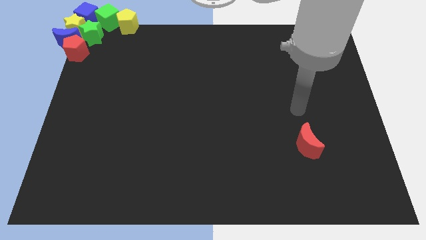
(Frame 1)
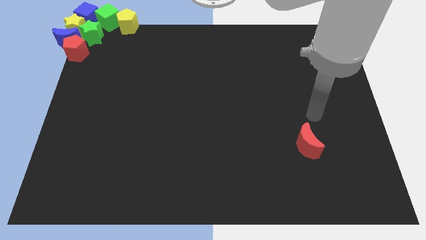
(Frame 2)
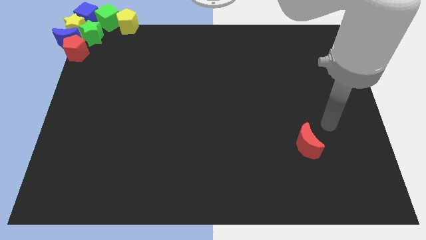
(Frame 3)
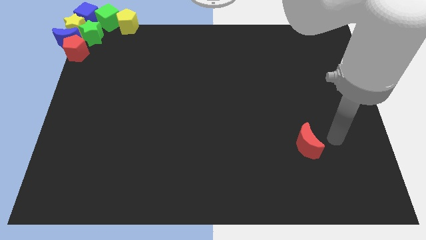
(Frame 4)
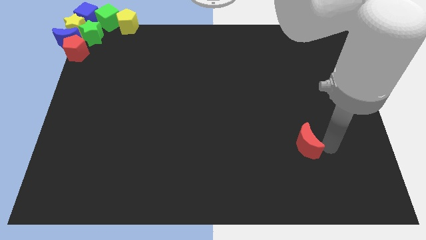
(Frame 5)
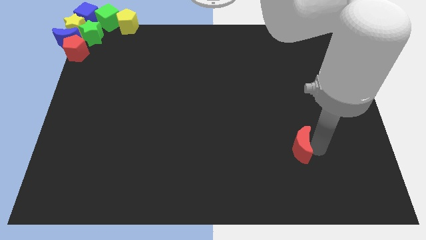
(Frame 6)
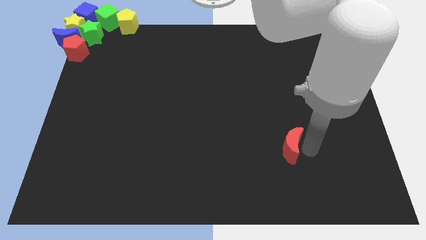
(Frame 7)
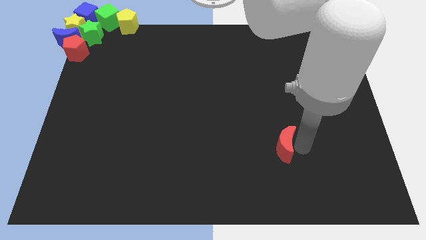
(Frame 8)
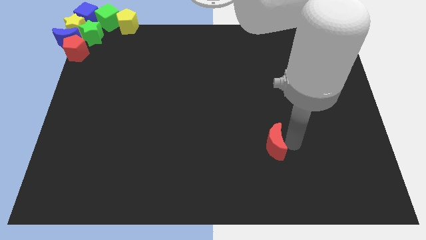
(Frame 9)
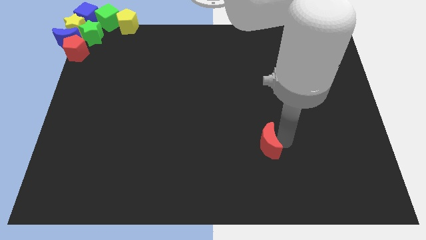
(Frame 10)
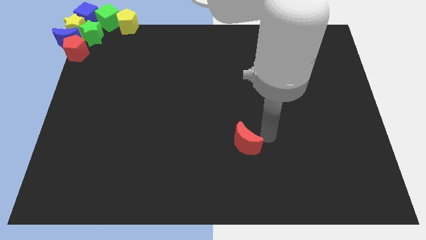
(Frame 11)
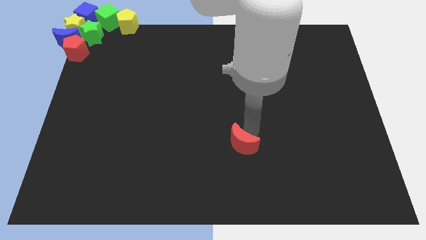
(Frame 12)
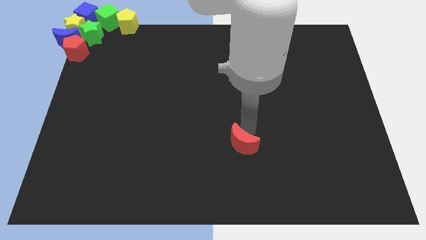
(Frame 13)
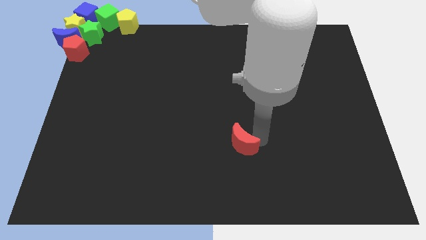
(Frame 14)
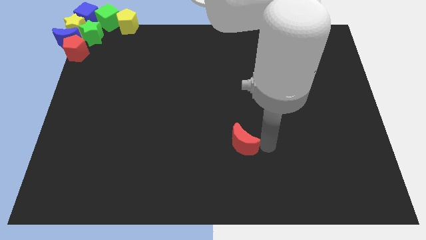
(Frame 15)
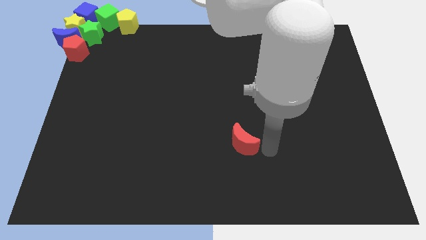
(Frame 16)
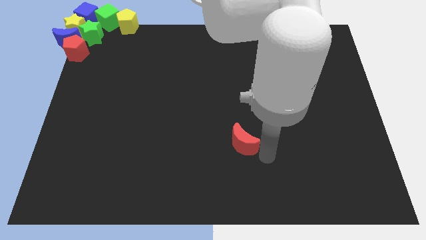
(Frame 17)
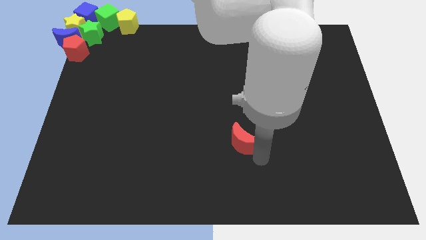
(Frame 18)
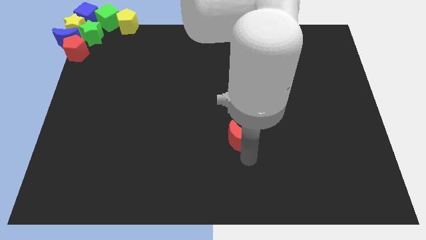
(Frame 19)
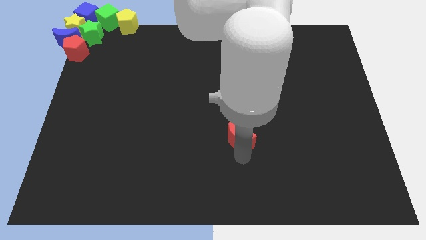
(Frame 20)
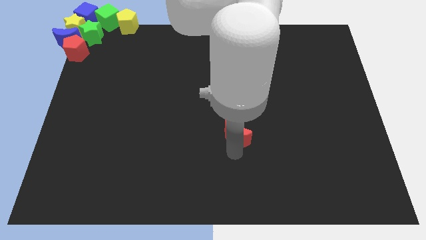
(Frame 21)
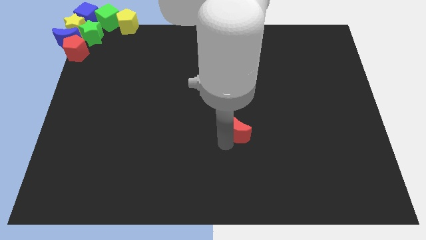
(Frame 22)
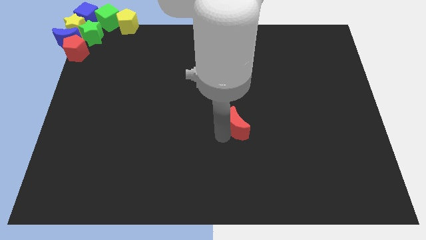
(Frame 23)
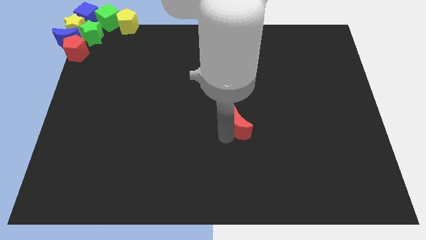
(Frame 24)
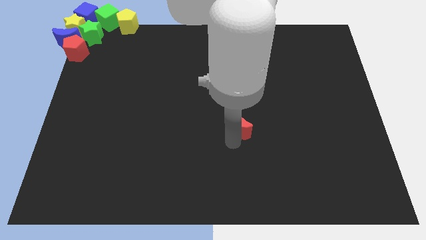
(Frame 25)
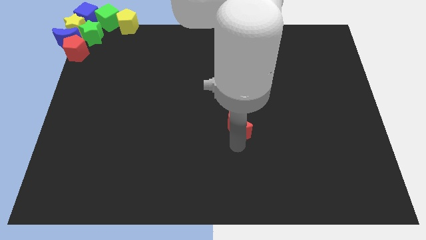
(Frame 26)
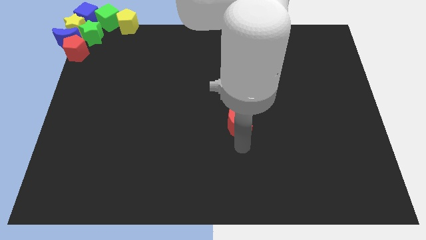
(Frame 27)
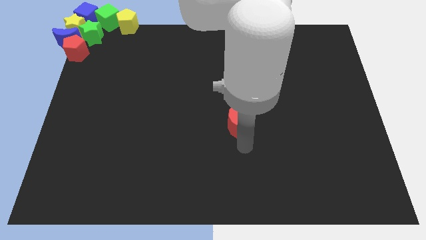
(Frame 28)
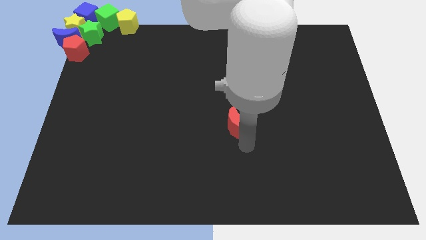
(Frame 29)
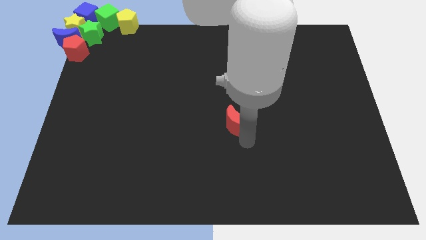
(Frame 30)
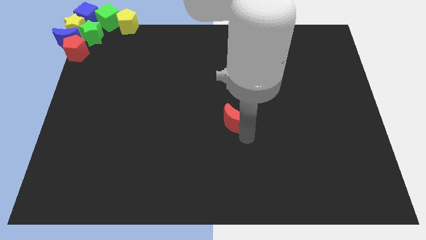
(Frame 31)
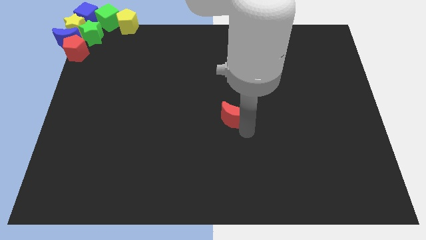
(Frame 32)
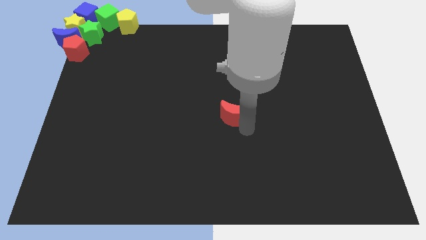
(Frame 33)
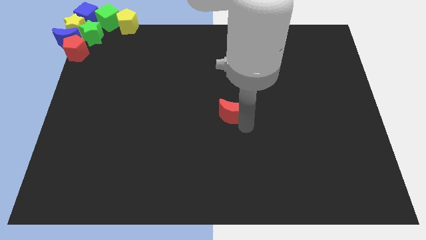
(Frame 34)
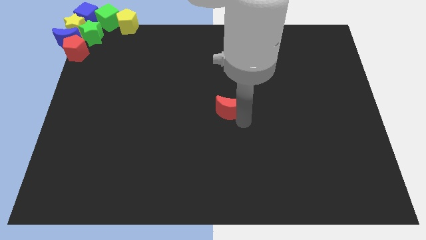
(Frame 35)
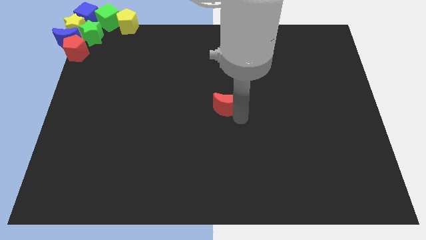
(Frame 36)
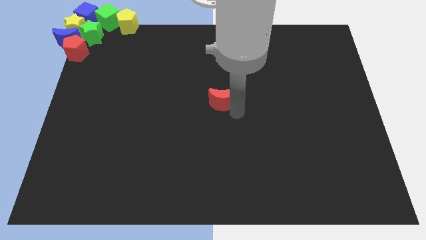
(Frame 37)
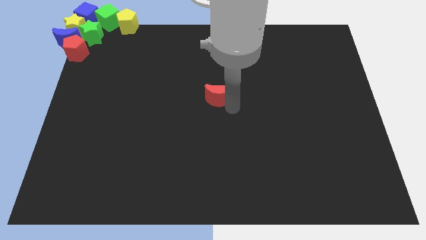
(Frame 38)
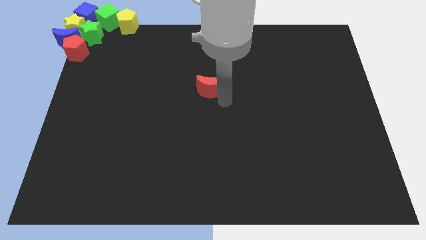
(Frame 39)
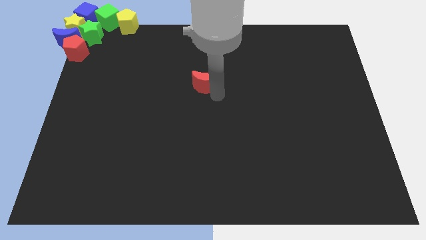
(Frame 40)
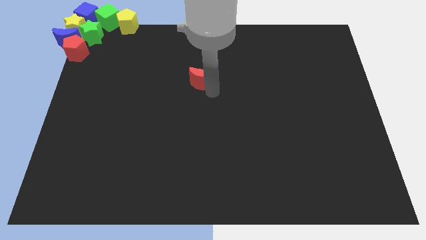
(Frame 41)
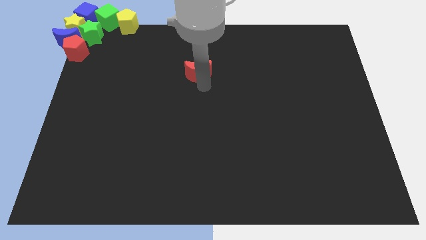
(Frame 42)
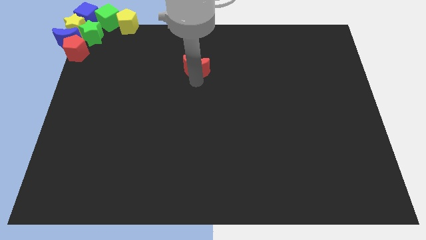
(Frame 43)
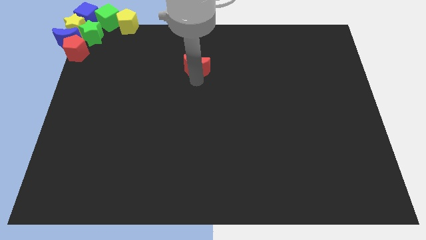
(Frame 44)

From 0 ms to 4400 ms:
push the red crescent towards the top center of the board

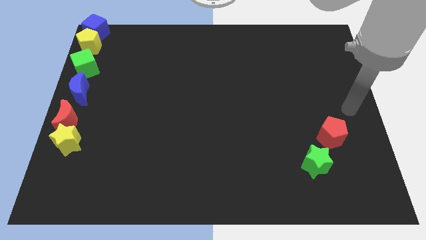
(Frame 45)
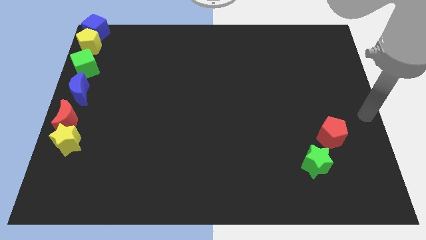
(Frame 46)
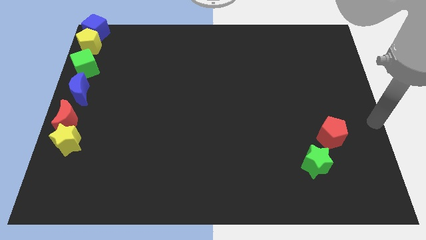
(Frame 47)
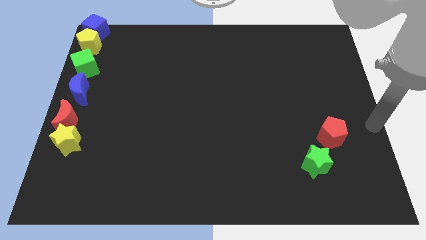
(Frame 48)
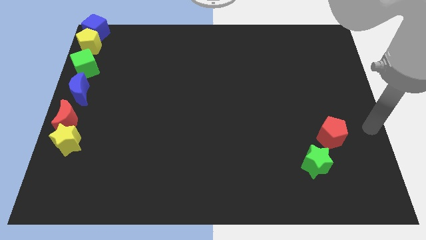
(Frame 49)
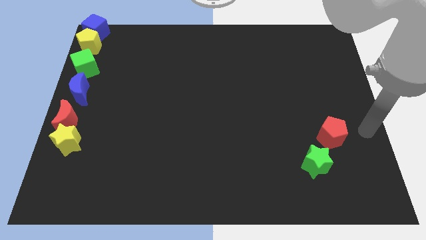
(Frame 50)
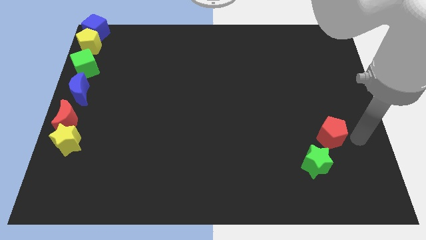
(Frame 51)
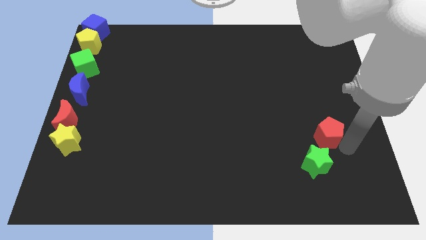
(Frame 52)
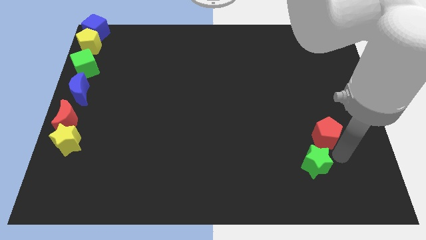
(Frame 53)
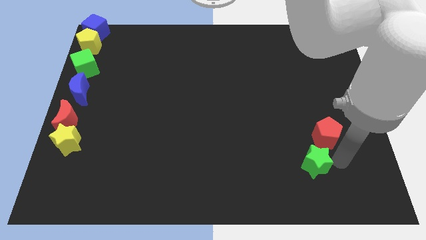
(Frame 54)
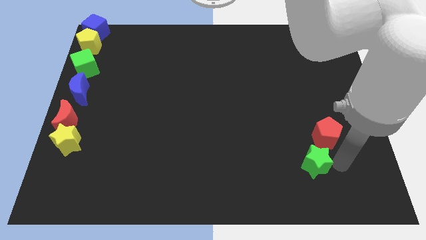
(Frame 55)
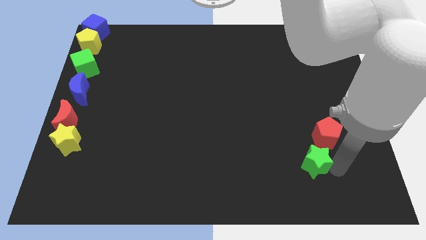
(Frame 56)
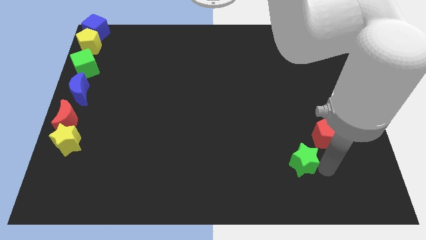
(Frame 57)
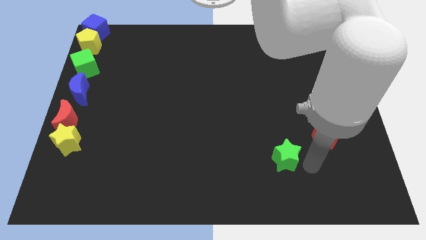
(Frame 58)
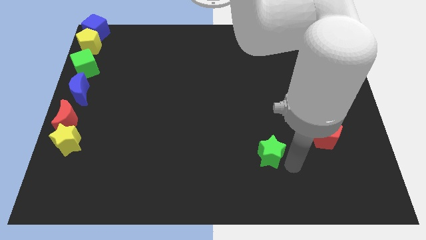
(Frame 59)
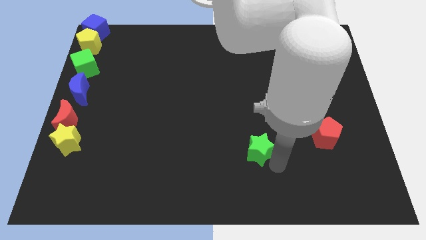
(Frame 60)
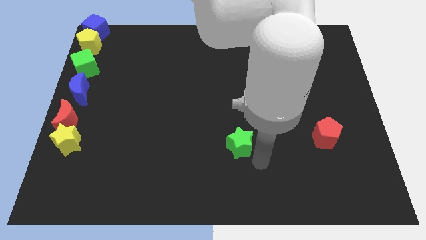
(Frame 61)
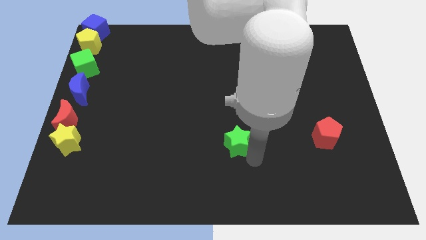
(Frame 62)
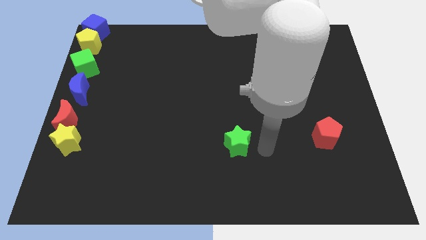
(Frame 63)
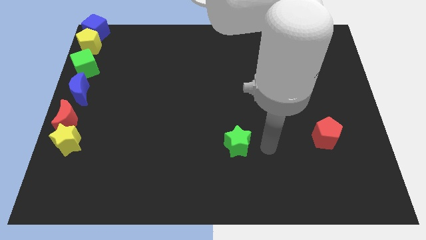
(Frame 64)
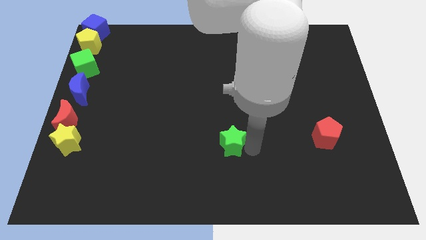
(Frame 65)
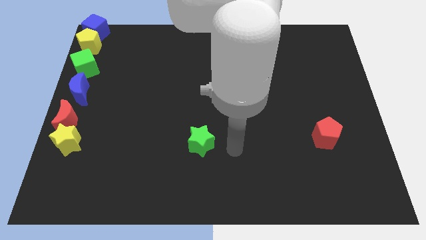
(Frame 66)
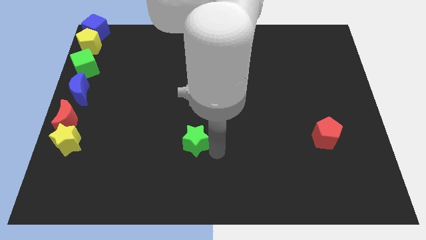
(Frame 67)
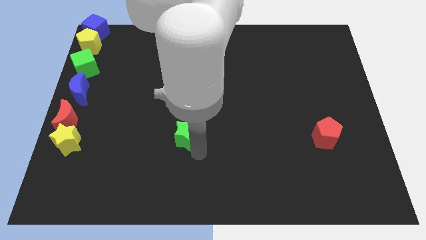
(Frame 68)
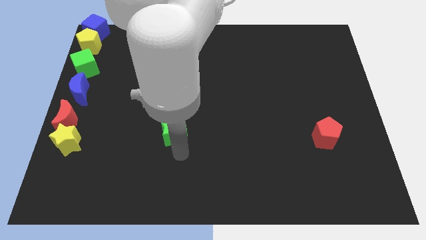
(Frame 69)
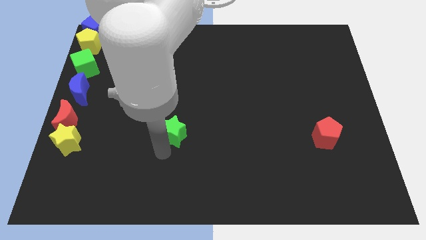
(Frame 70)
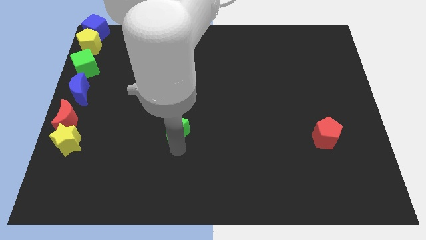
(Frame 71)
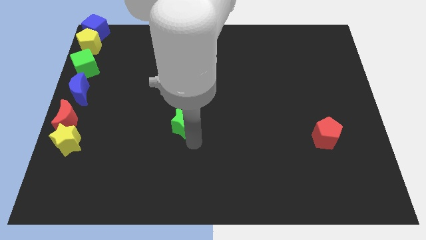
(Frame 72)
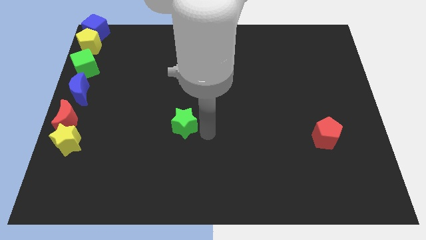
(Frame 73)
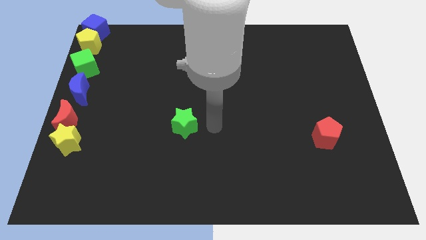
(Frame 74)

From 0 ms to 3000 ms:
move the green star towards the centre of the board

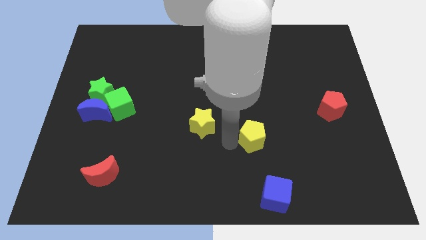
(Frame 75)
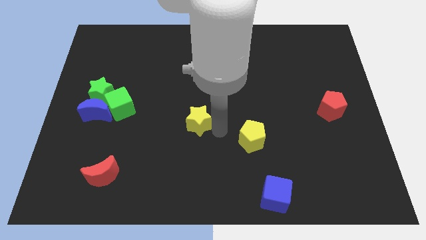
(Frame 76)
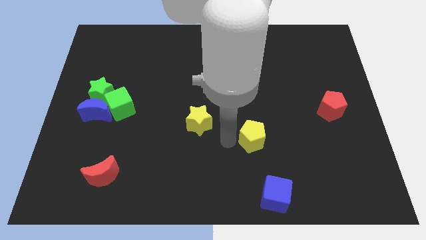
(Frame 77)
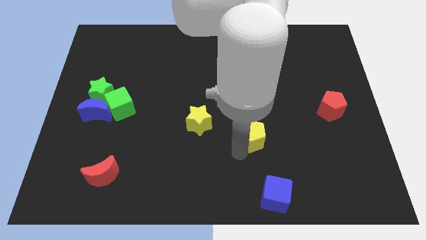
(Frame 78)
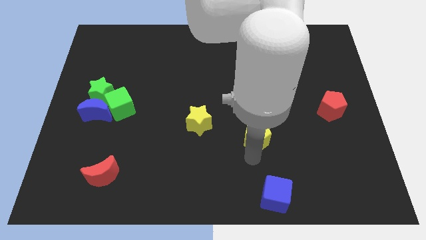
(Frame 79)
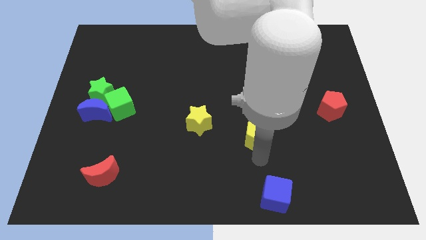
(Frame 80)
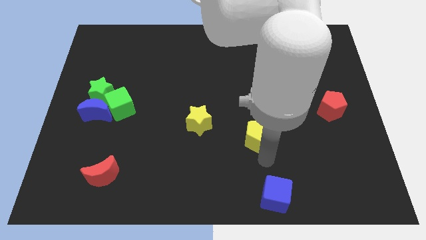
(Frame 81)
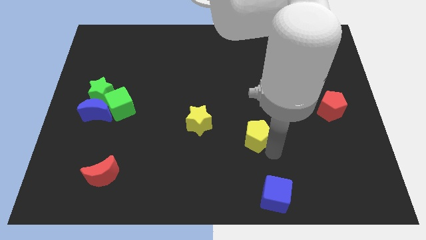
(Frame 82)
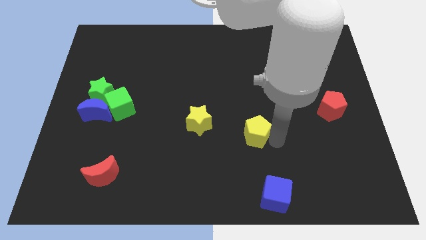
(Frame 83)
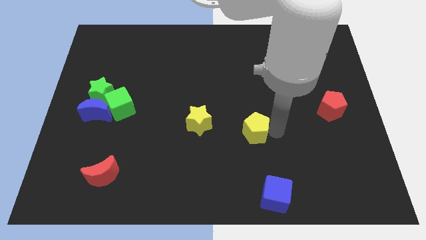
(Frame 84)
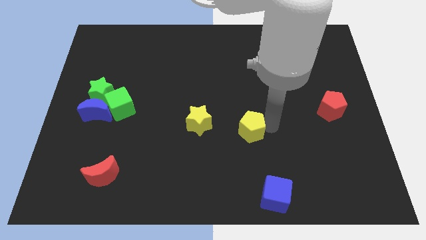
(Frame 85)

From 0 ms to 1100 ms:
push yellow pentagon parallel right to yellow star

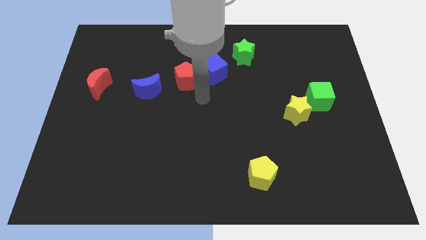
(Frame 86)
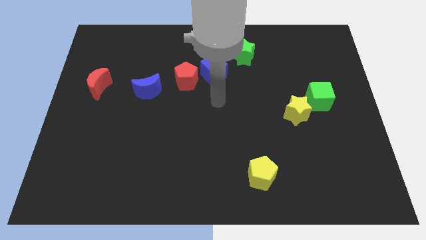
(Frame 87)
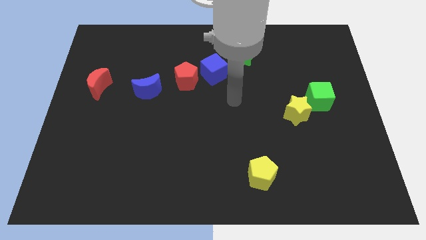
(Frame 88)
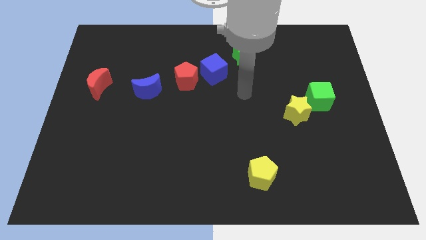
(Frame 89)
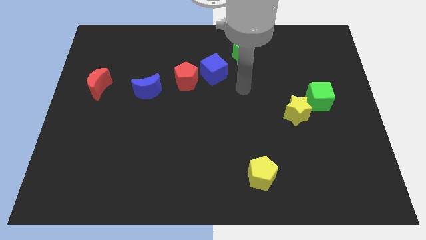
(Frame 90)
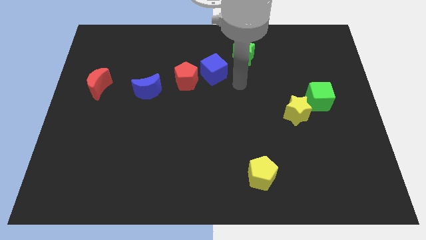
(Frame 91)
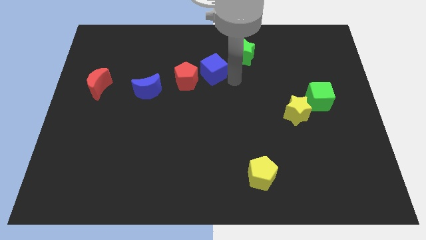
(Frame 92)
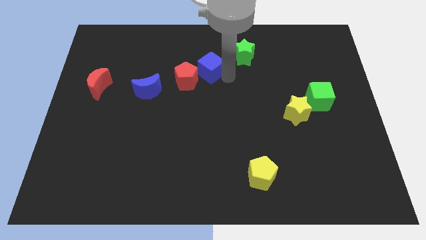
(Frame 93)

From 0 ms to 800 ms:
drag your arm to the blue cube

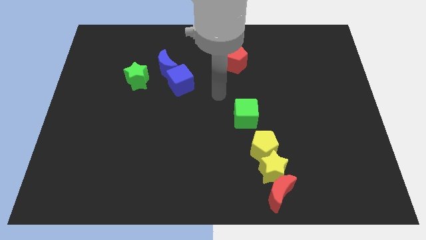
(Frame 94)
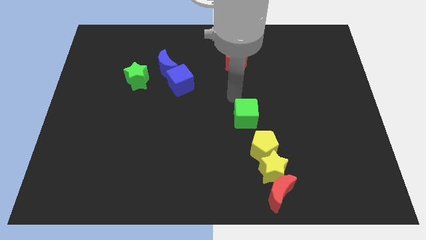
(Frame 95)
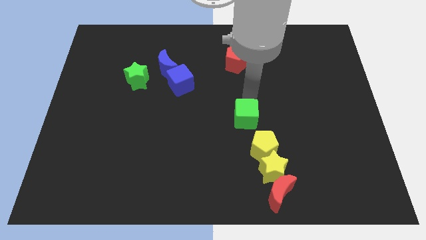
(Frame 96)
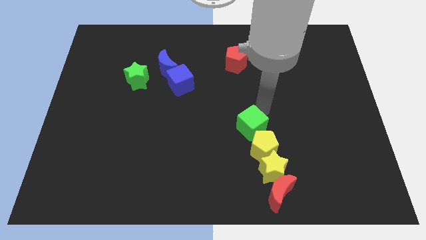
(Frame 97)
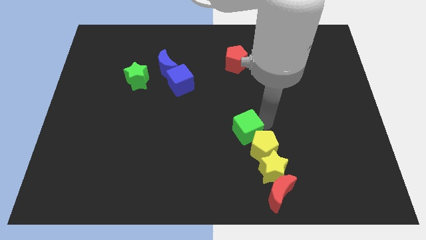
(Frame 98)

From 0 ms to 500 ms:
move the green cube to the top left of the yellow pentagon
